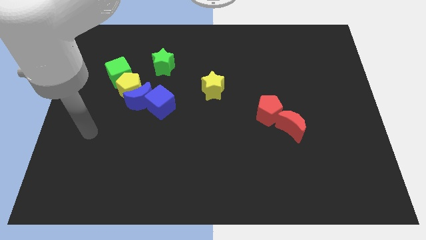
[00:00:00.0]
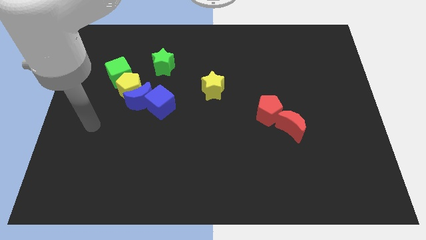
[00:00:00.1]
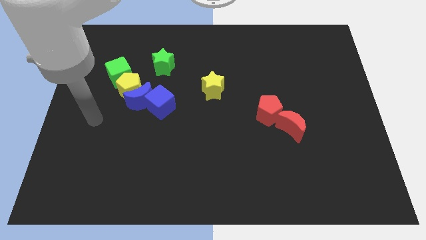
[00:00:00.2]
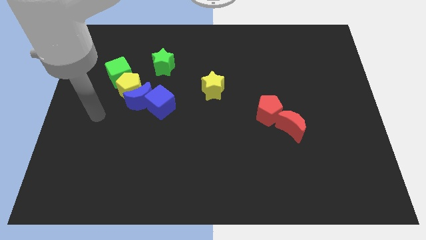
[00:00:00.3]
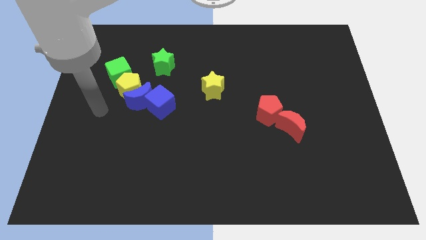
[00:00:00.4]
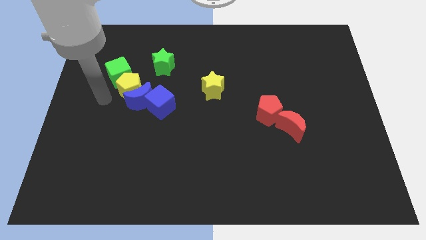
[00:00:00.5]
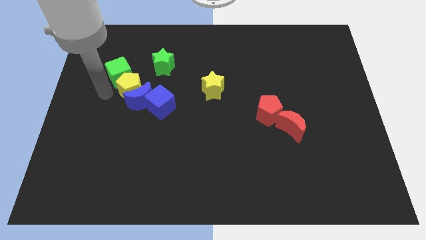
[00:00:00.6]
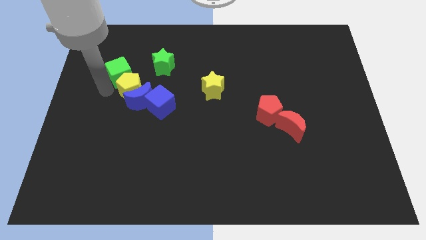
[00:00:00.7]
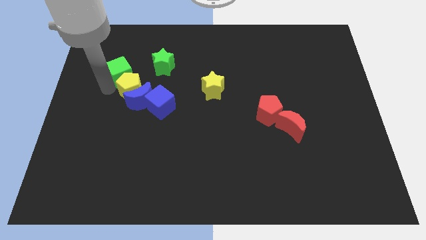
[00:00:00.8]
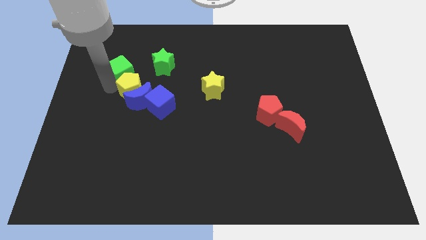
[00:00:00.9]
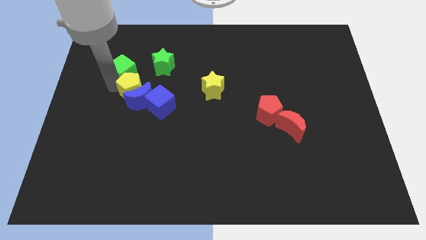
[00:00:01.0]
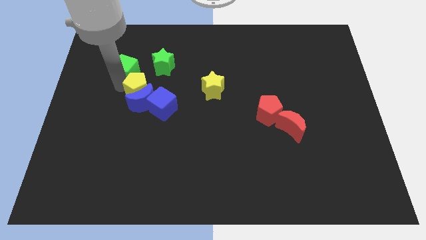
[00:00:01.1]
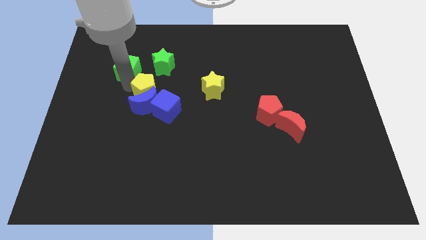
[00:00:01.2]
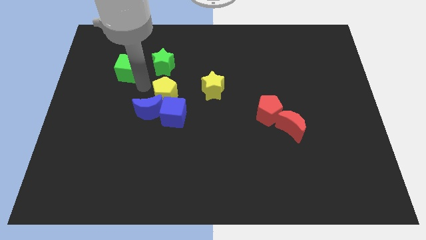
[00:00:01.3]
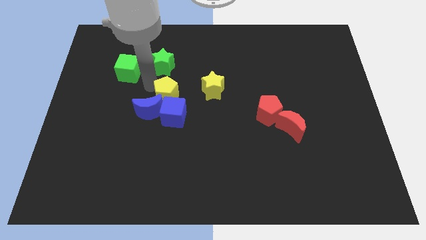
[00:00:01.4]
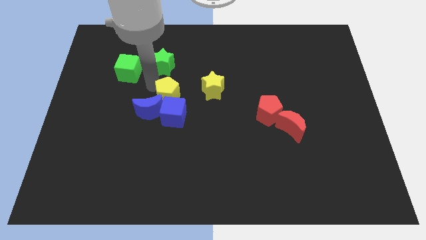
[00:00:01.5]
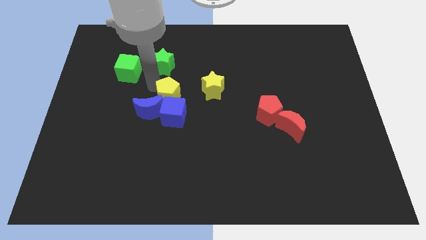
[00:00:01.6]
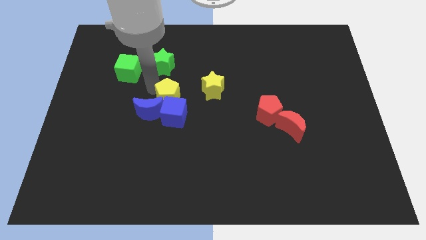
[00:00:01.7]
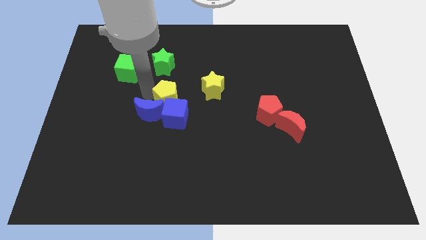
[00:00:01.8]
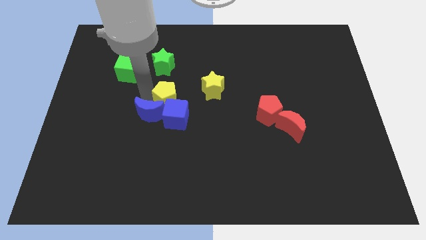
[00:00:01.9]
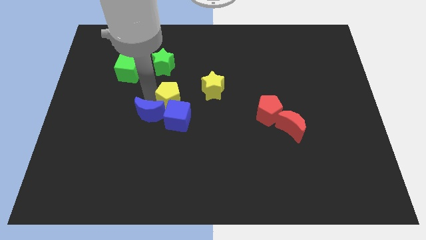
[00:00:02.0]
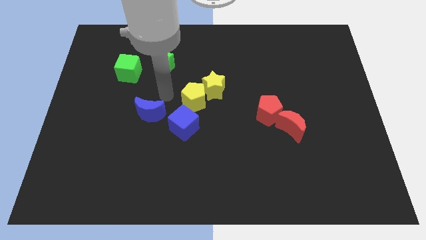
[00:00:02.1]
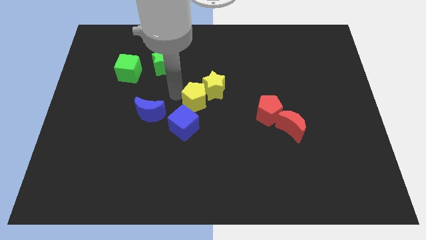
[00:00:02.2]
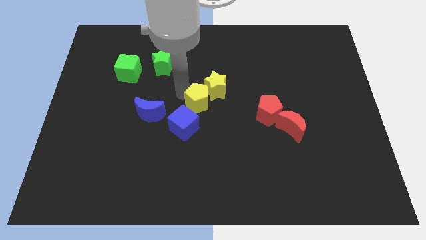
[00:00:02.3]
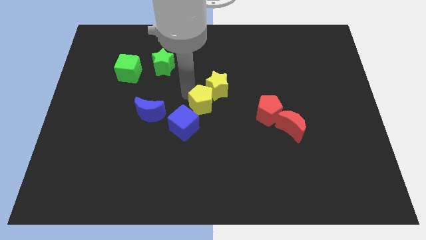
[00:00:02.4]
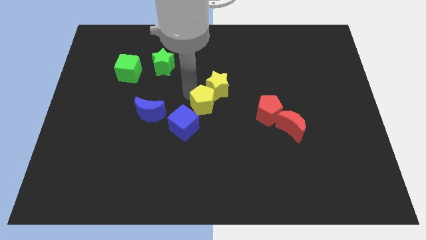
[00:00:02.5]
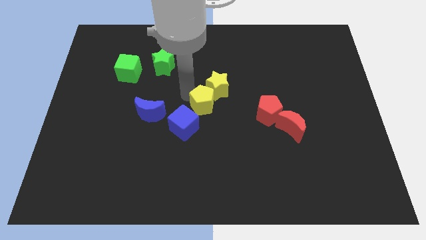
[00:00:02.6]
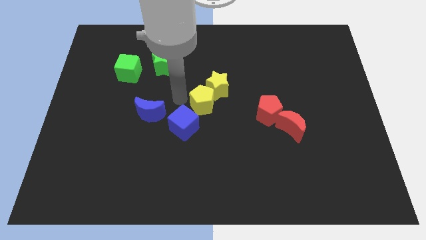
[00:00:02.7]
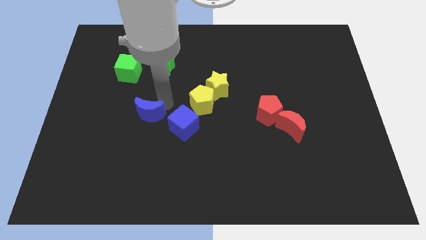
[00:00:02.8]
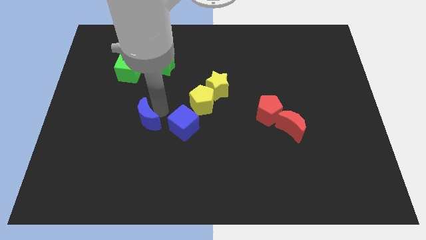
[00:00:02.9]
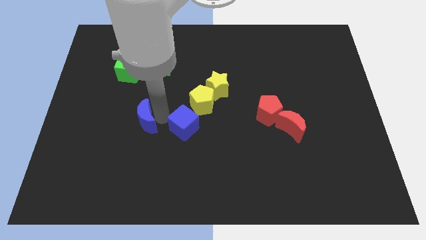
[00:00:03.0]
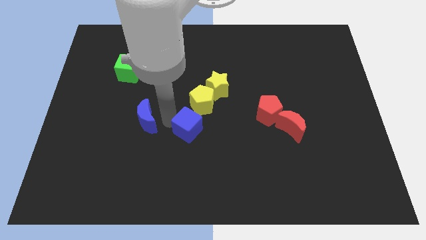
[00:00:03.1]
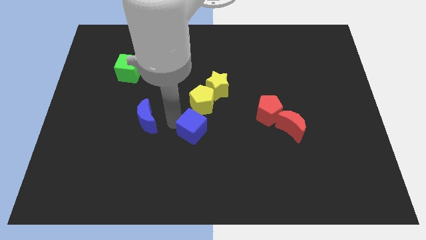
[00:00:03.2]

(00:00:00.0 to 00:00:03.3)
move the blue cube and yellow pentagon diagonally on the bottom left side of the yellow star

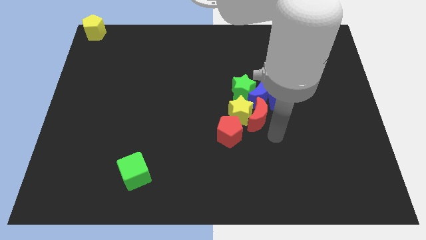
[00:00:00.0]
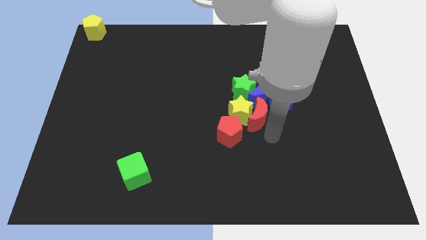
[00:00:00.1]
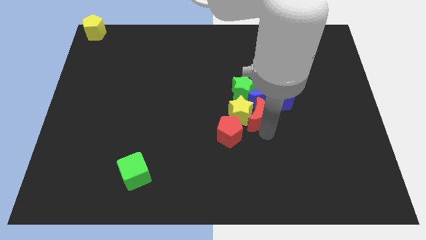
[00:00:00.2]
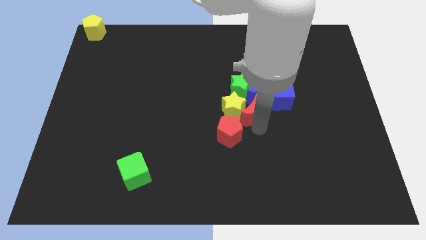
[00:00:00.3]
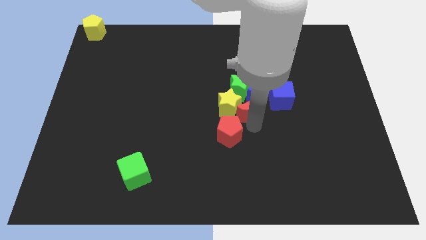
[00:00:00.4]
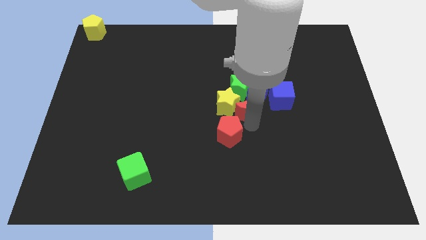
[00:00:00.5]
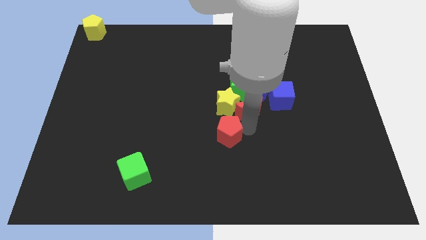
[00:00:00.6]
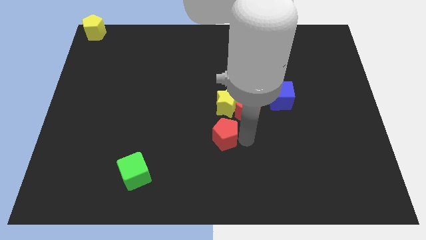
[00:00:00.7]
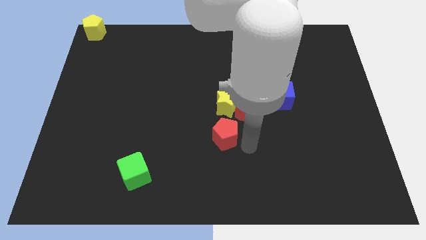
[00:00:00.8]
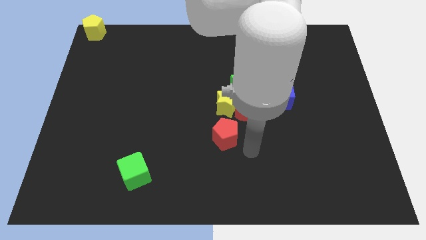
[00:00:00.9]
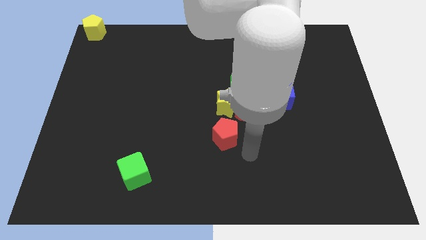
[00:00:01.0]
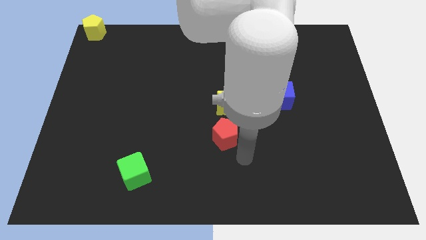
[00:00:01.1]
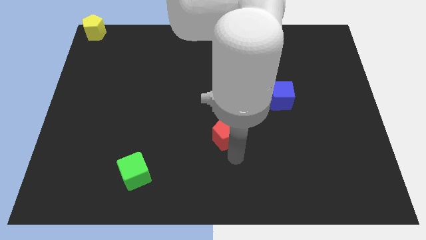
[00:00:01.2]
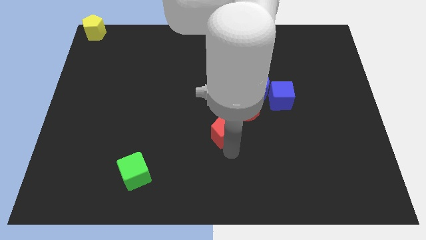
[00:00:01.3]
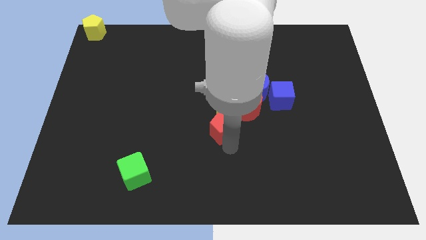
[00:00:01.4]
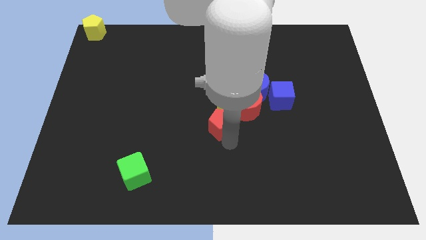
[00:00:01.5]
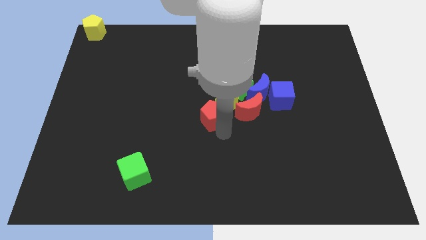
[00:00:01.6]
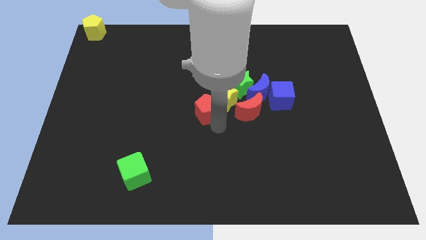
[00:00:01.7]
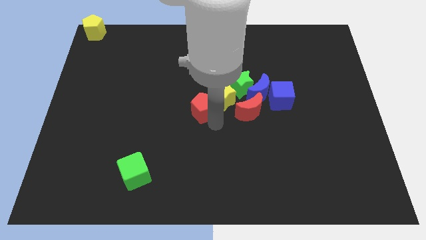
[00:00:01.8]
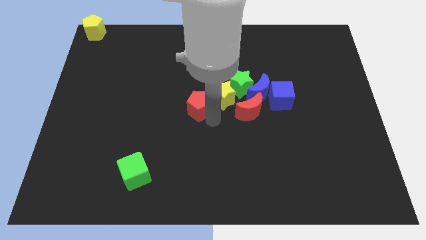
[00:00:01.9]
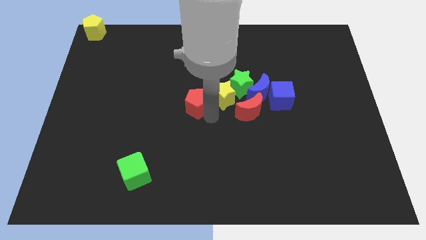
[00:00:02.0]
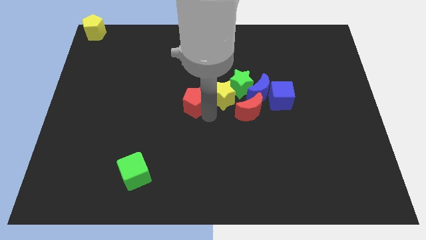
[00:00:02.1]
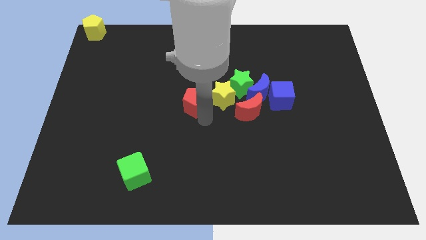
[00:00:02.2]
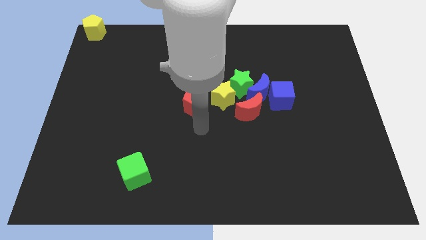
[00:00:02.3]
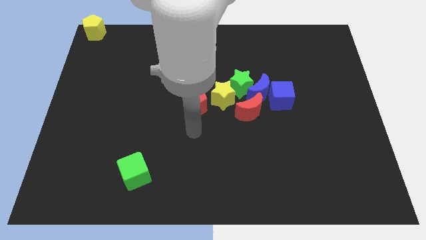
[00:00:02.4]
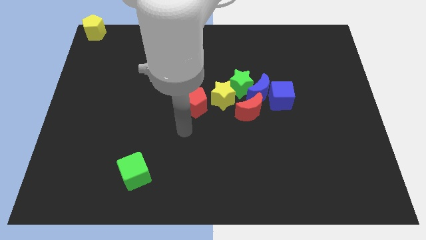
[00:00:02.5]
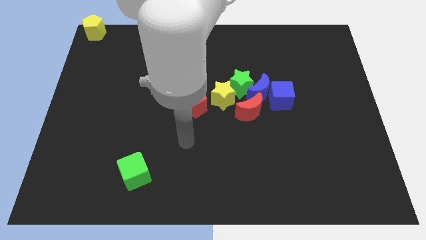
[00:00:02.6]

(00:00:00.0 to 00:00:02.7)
move the red pentagon close to the left of yellow star

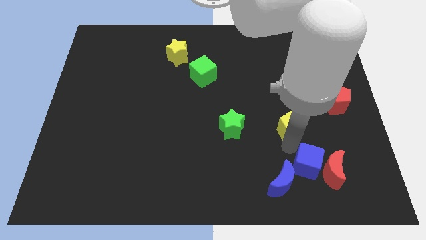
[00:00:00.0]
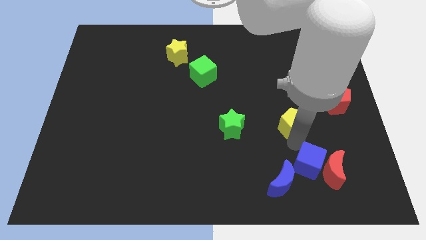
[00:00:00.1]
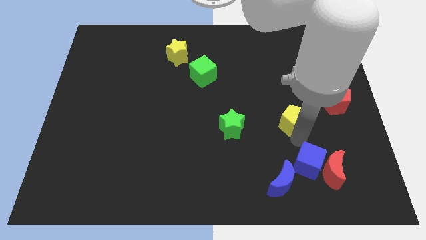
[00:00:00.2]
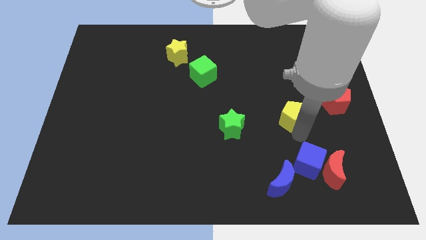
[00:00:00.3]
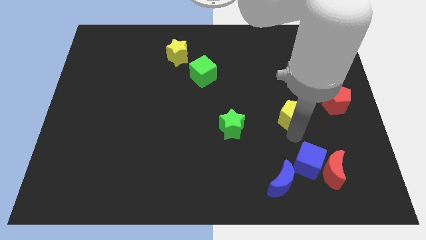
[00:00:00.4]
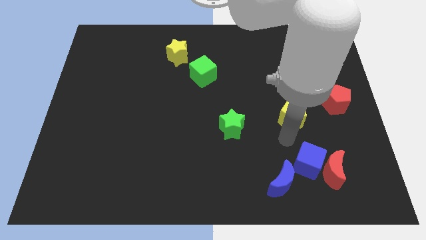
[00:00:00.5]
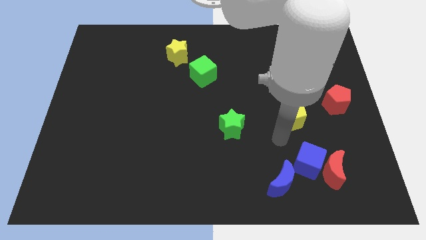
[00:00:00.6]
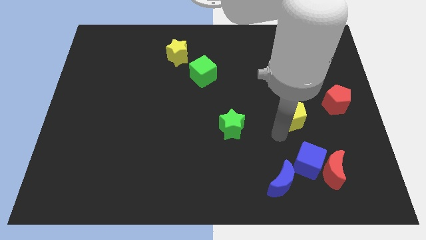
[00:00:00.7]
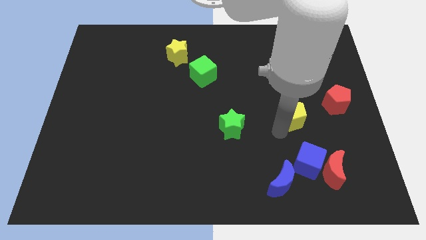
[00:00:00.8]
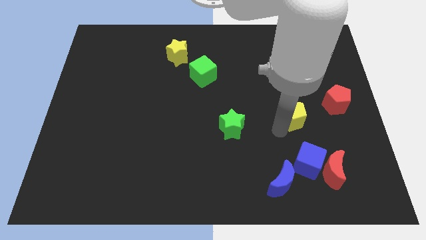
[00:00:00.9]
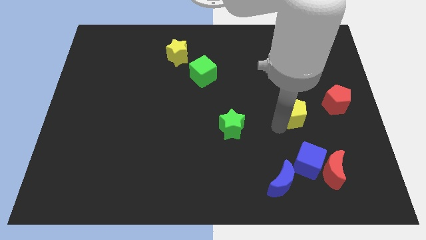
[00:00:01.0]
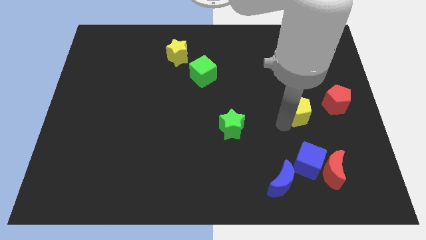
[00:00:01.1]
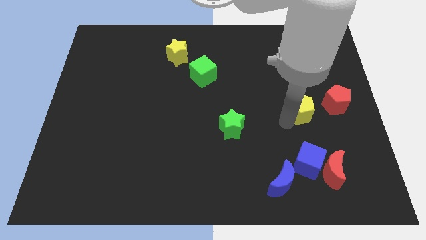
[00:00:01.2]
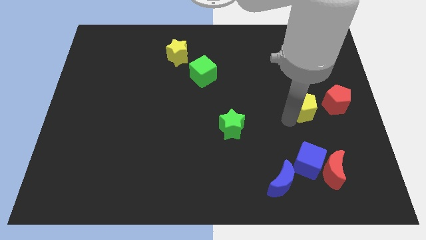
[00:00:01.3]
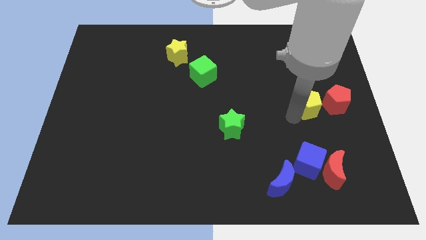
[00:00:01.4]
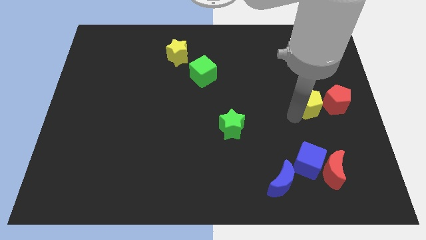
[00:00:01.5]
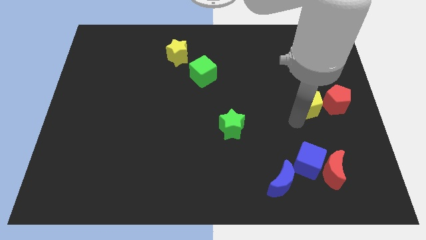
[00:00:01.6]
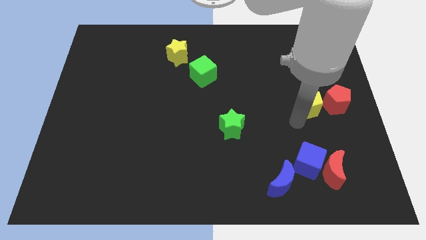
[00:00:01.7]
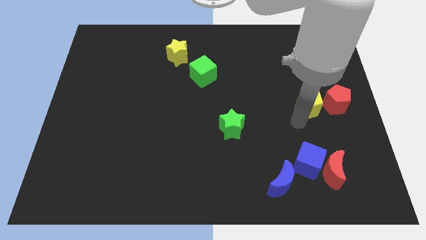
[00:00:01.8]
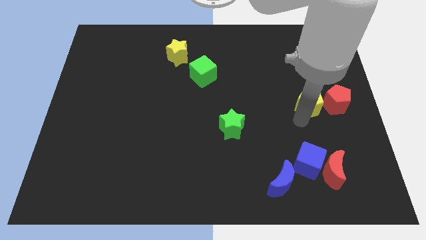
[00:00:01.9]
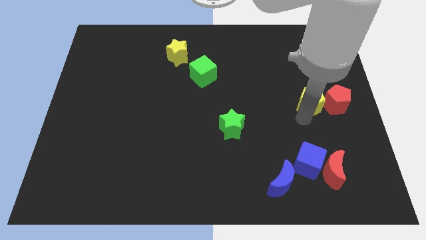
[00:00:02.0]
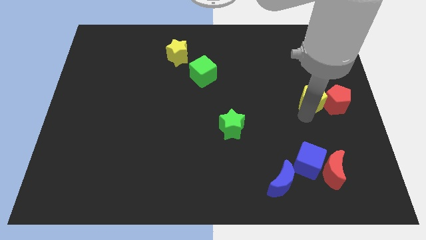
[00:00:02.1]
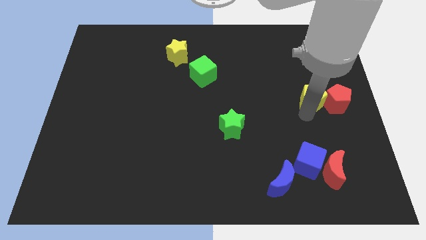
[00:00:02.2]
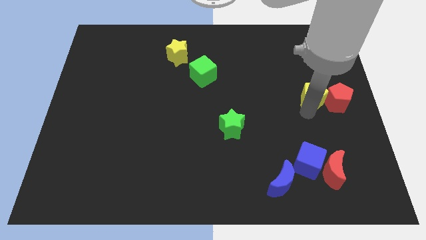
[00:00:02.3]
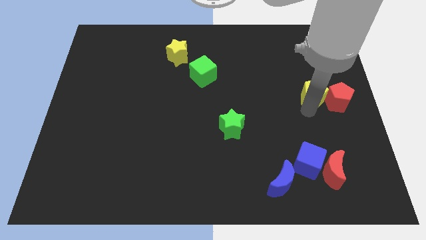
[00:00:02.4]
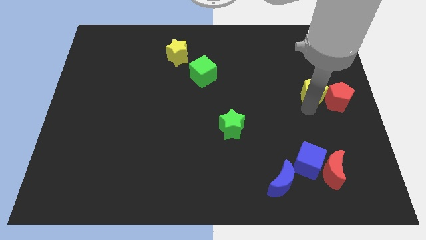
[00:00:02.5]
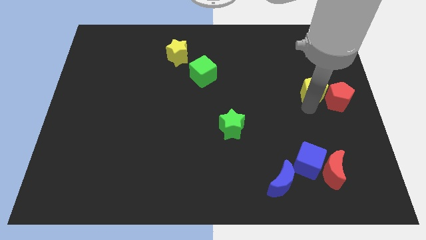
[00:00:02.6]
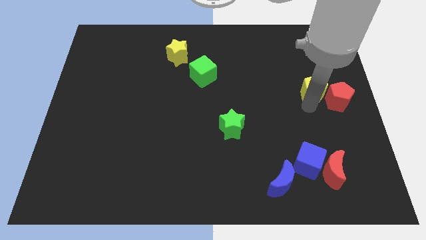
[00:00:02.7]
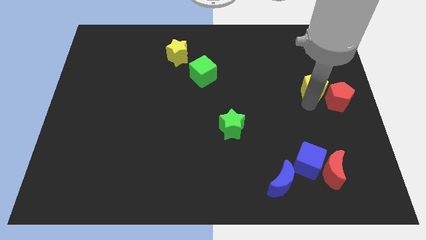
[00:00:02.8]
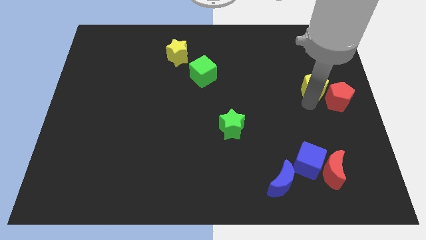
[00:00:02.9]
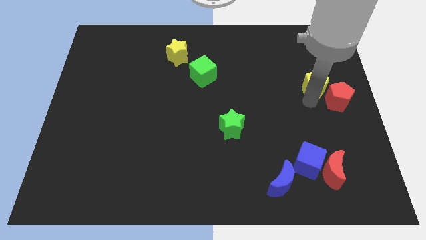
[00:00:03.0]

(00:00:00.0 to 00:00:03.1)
place the yellow pentagon to left of red pentagon
